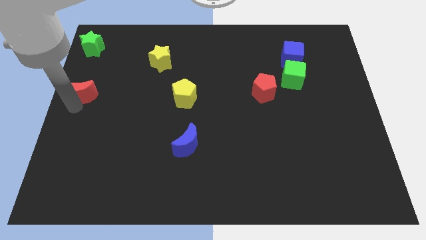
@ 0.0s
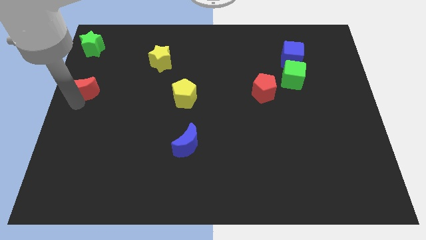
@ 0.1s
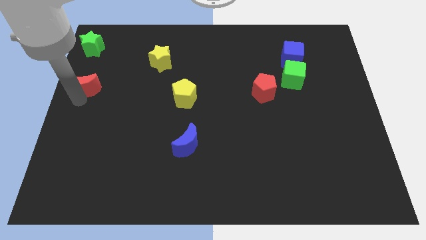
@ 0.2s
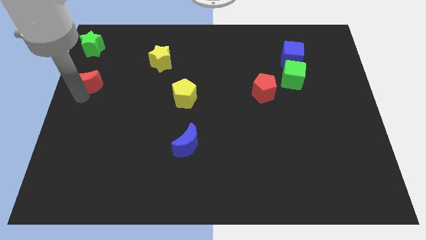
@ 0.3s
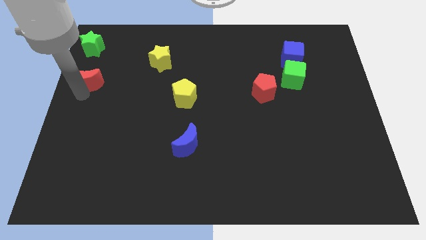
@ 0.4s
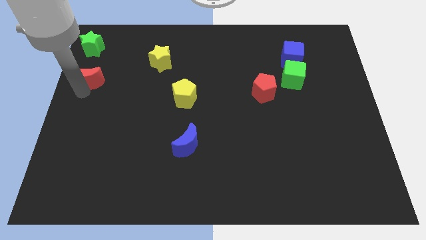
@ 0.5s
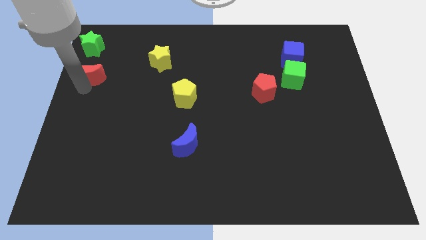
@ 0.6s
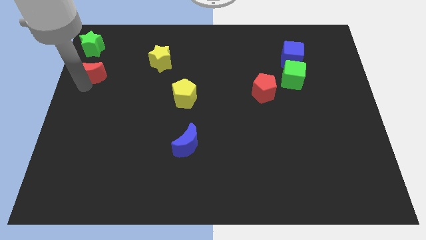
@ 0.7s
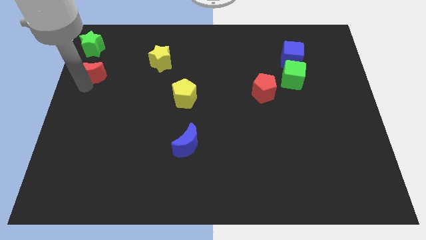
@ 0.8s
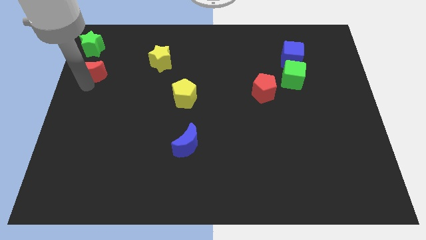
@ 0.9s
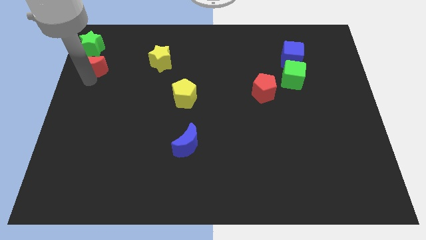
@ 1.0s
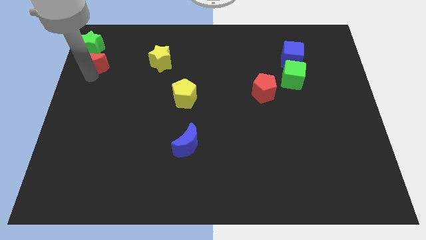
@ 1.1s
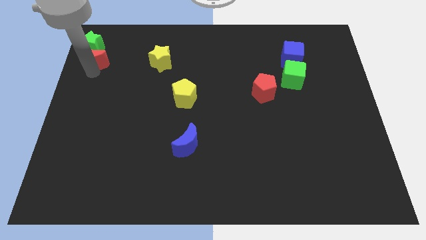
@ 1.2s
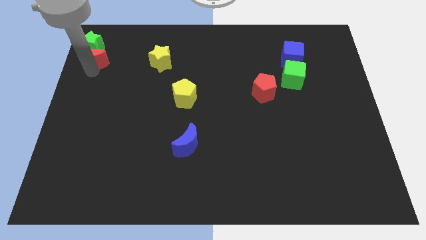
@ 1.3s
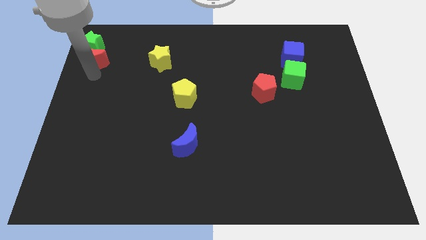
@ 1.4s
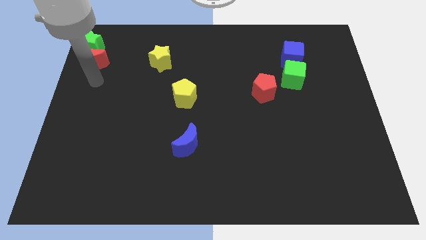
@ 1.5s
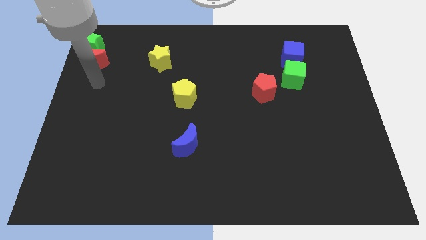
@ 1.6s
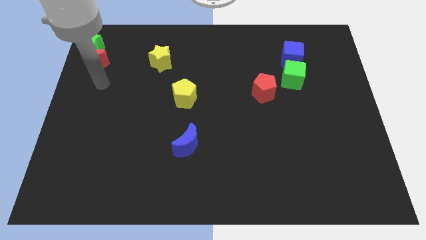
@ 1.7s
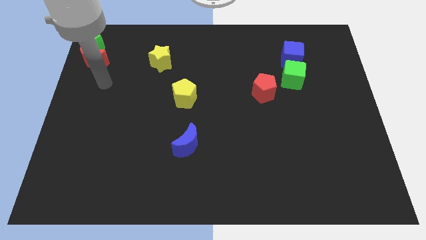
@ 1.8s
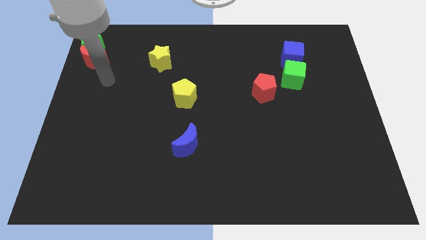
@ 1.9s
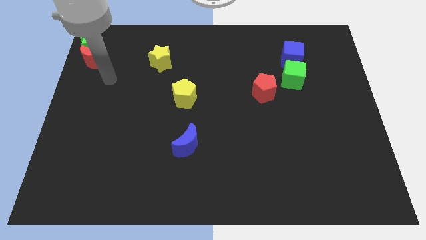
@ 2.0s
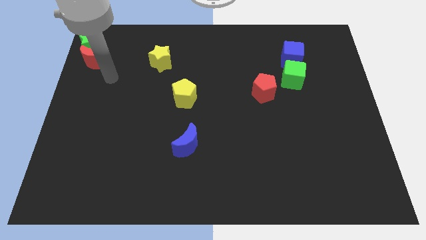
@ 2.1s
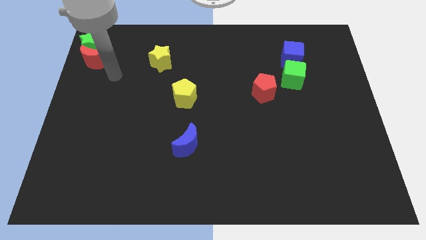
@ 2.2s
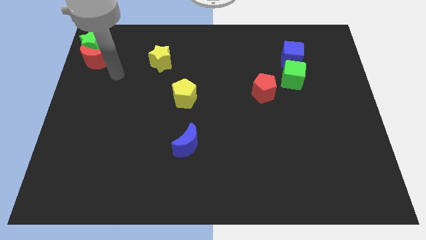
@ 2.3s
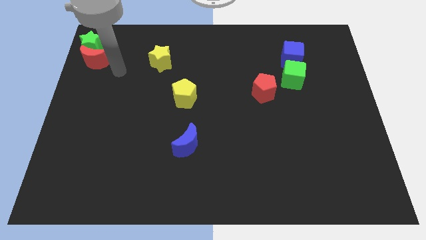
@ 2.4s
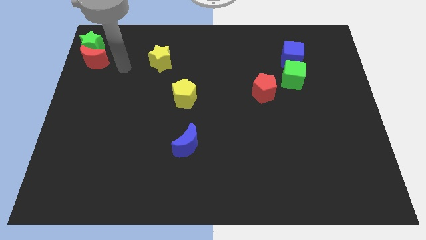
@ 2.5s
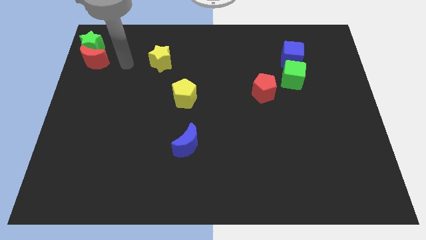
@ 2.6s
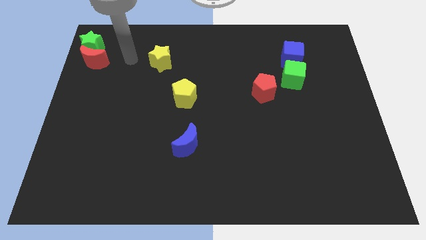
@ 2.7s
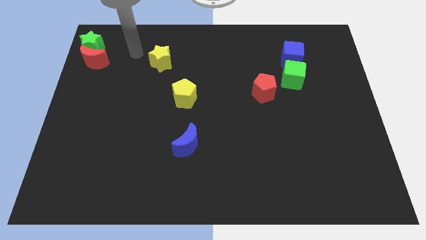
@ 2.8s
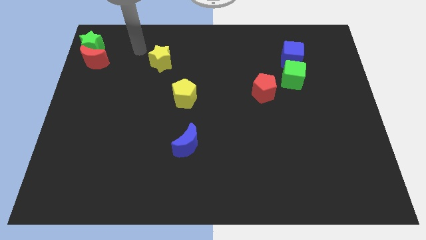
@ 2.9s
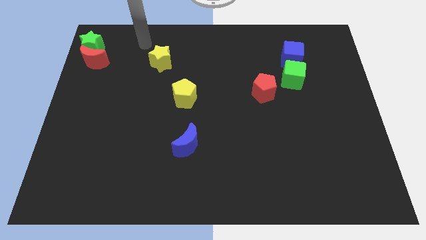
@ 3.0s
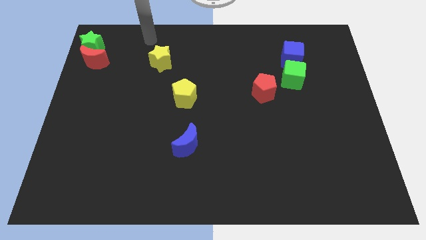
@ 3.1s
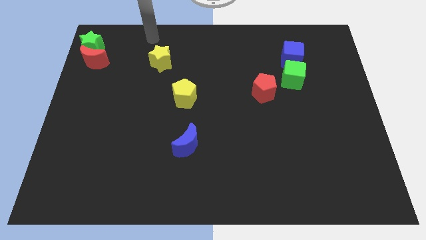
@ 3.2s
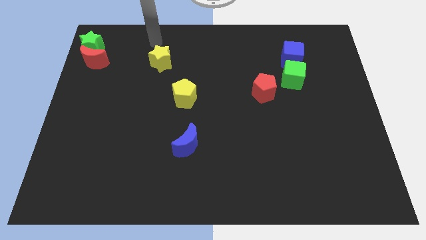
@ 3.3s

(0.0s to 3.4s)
push the red moon into the green star

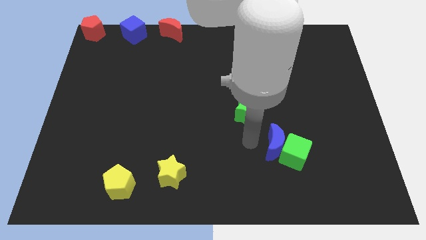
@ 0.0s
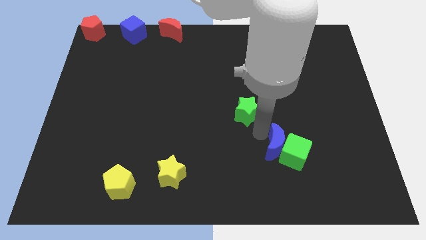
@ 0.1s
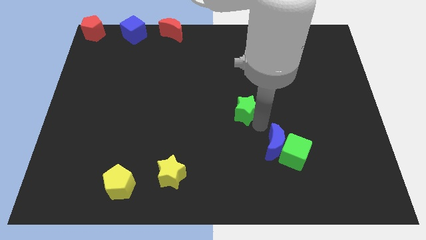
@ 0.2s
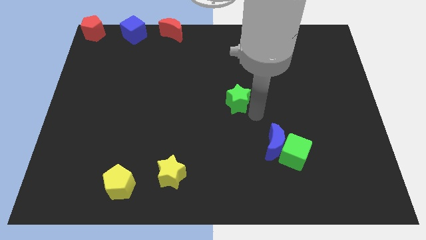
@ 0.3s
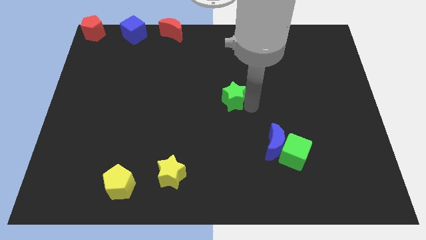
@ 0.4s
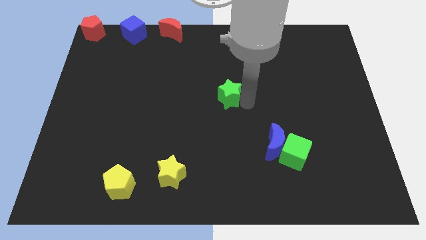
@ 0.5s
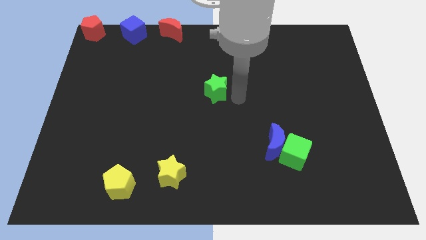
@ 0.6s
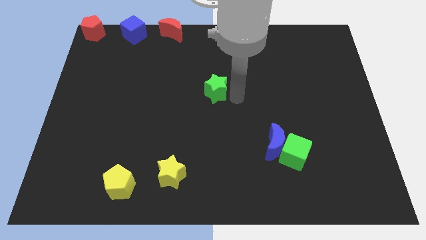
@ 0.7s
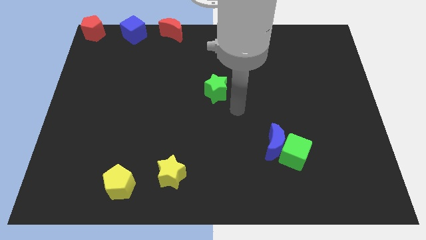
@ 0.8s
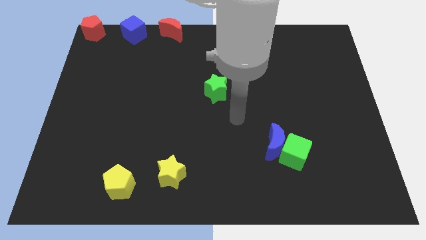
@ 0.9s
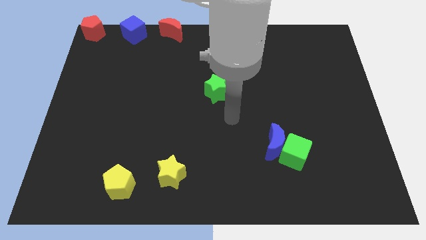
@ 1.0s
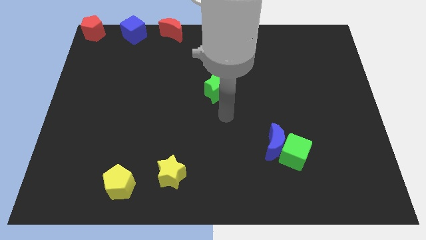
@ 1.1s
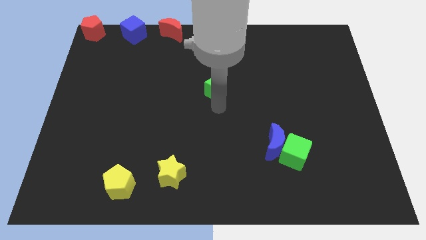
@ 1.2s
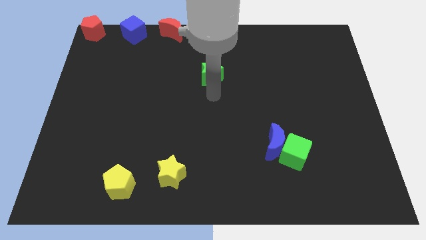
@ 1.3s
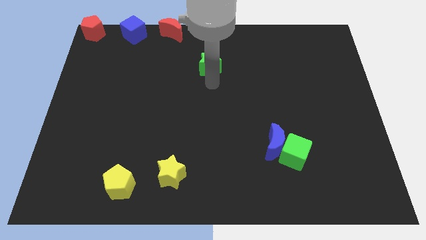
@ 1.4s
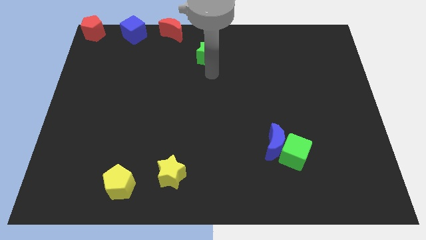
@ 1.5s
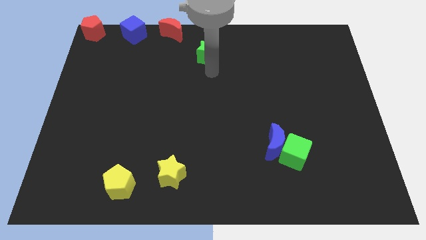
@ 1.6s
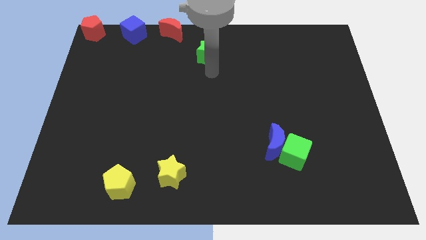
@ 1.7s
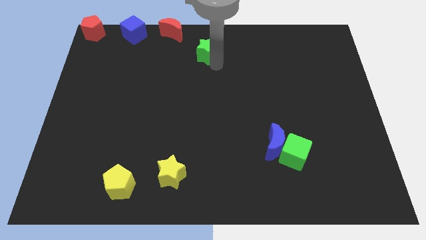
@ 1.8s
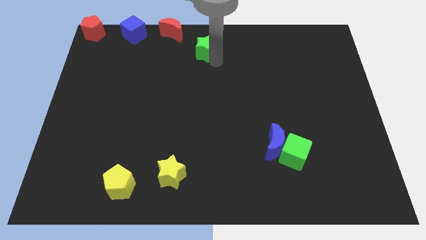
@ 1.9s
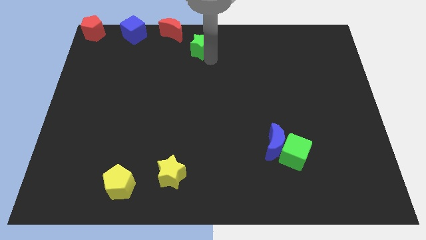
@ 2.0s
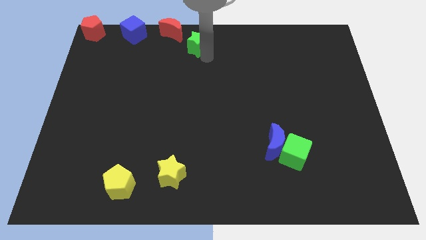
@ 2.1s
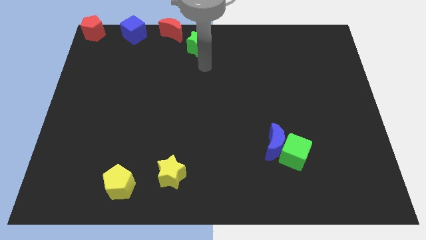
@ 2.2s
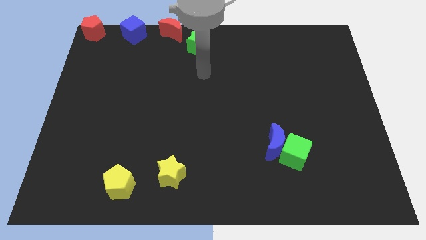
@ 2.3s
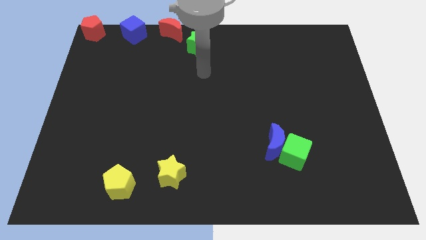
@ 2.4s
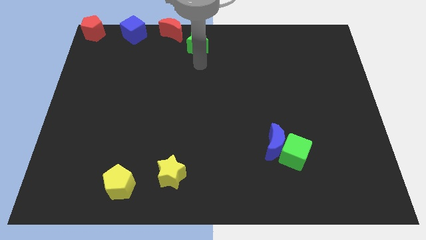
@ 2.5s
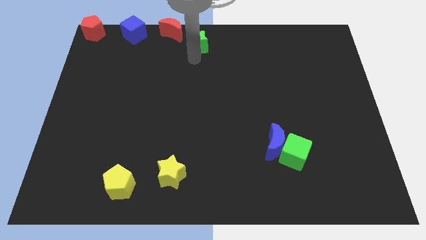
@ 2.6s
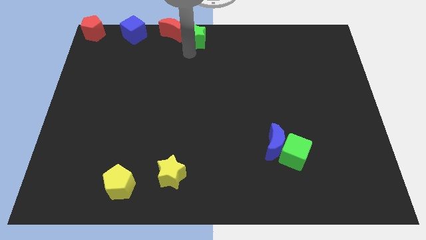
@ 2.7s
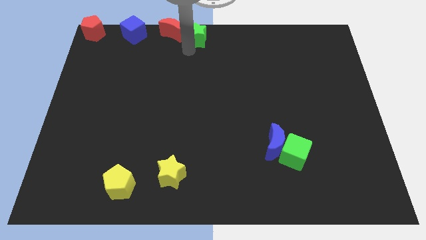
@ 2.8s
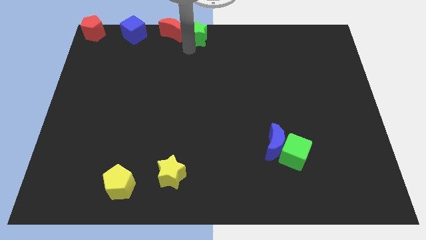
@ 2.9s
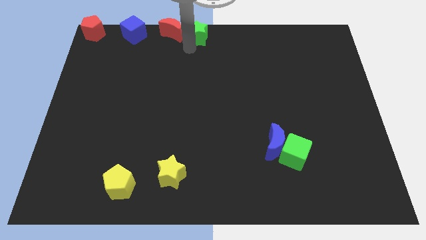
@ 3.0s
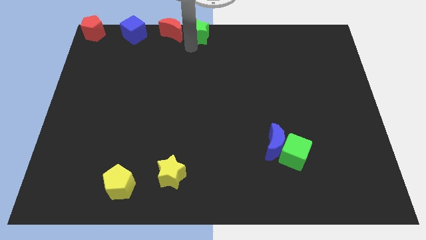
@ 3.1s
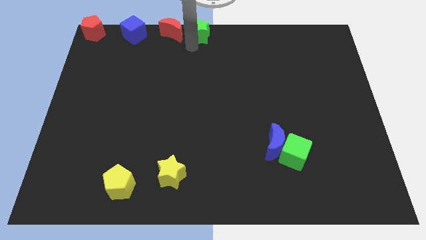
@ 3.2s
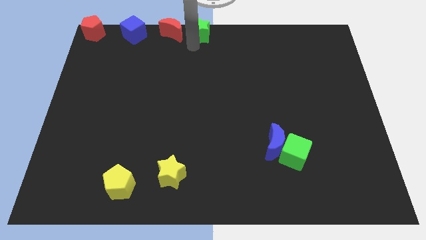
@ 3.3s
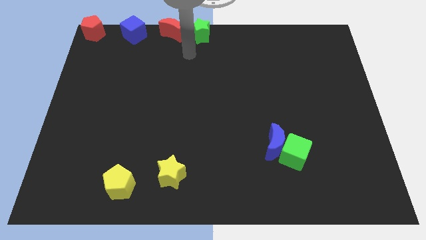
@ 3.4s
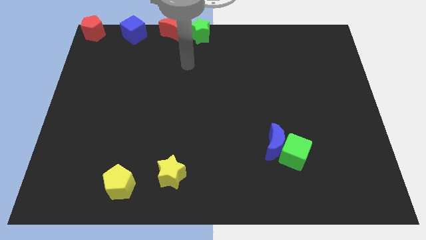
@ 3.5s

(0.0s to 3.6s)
move the green star to the right side of the red moon

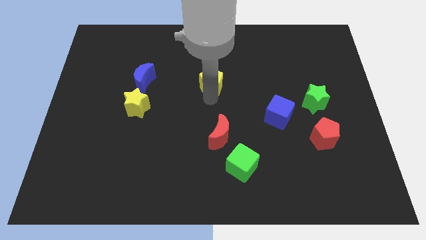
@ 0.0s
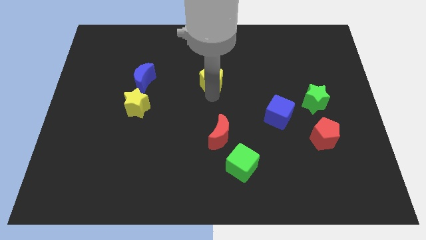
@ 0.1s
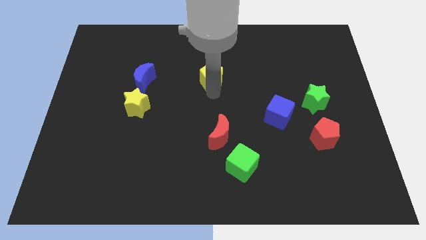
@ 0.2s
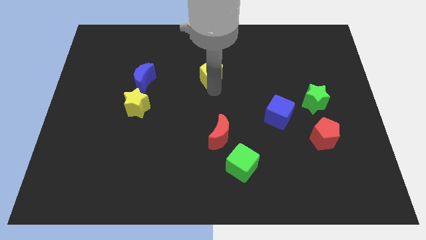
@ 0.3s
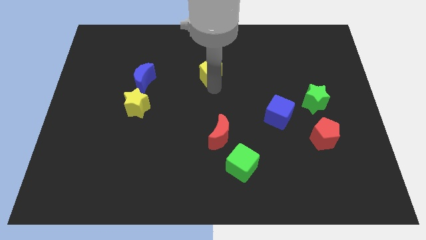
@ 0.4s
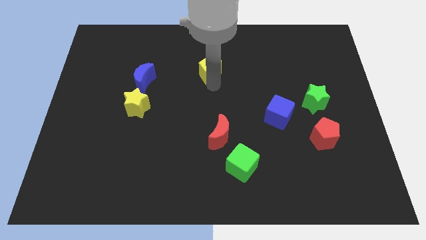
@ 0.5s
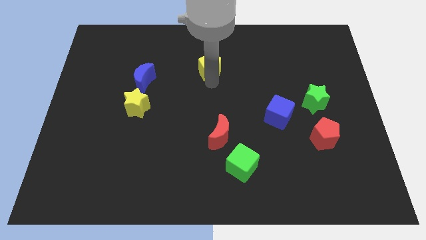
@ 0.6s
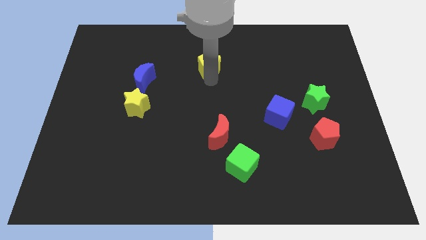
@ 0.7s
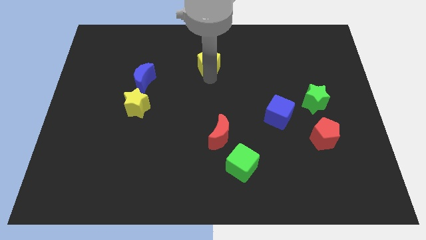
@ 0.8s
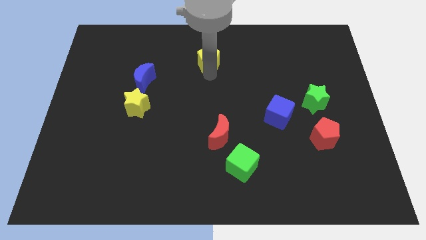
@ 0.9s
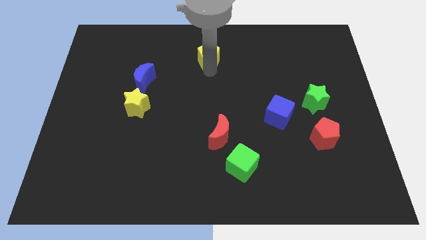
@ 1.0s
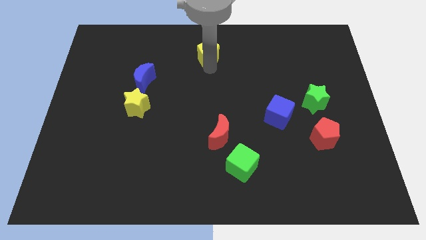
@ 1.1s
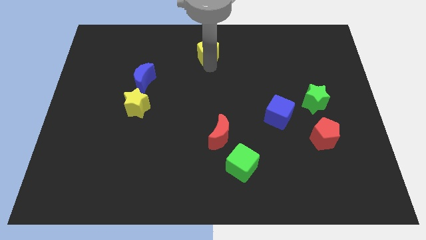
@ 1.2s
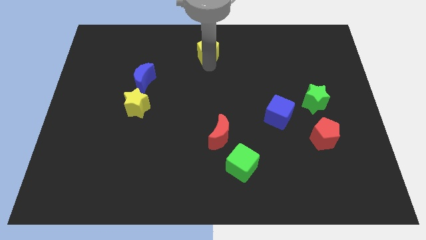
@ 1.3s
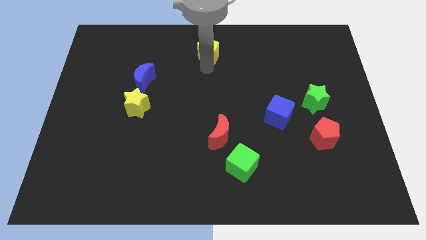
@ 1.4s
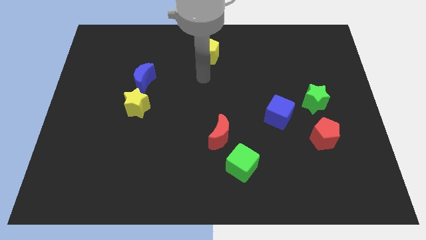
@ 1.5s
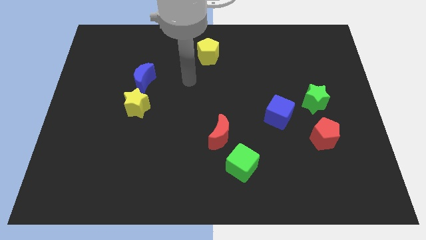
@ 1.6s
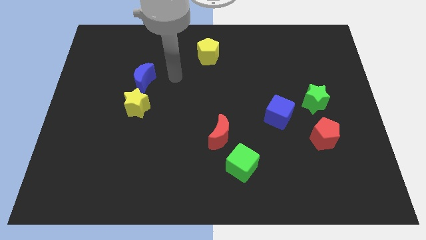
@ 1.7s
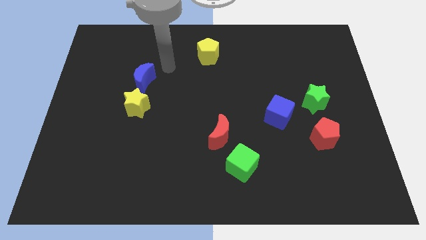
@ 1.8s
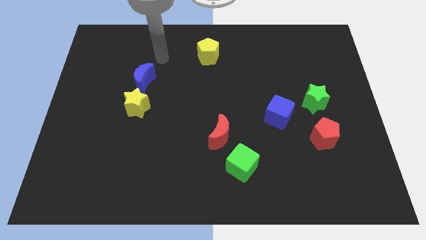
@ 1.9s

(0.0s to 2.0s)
push the yellow pentagon towards the top center
